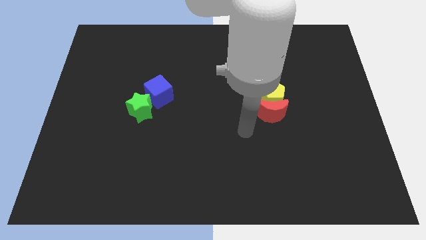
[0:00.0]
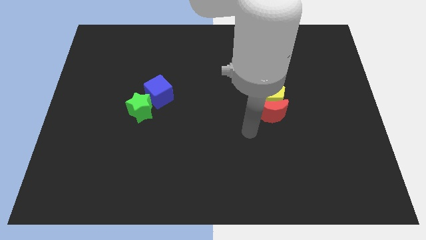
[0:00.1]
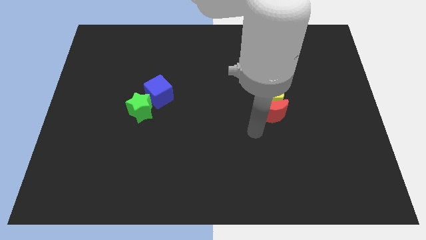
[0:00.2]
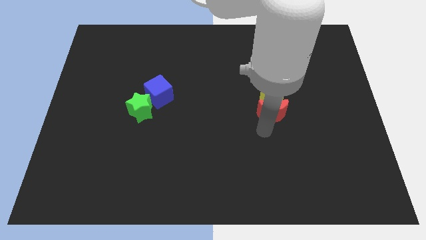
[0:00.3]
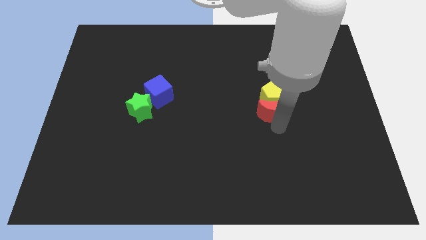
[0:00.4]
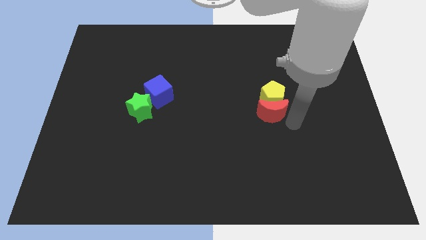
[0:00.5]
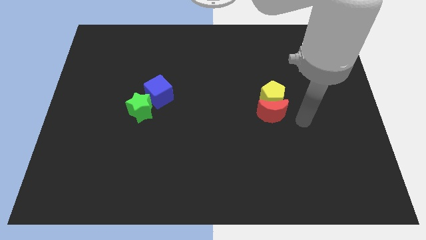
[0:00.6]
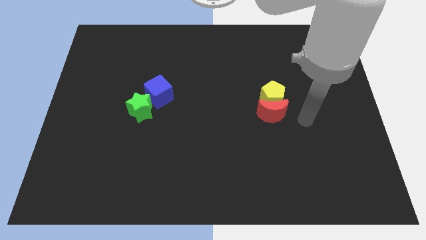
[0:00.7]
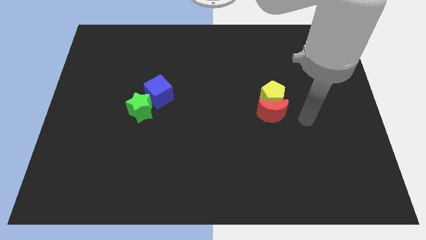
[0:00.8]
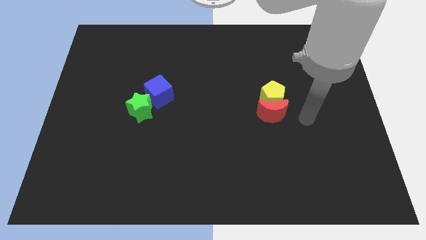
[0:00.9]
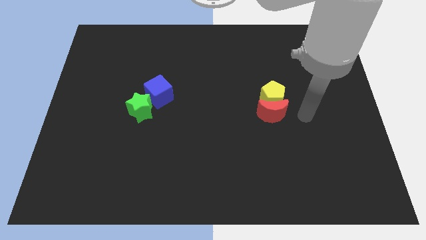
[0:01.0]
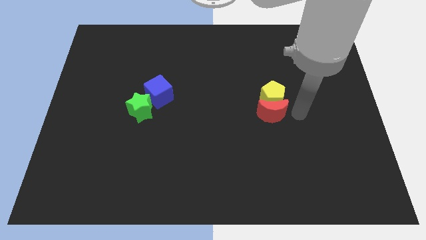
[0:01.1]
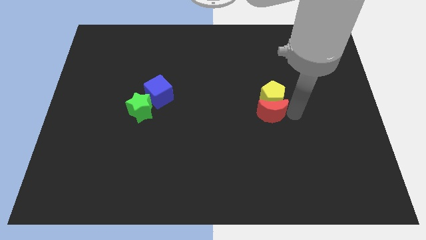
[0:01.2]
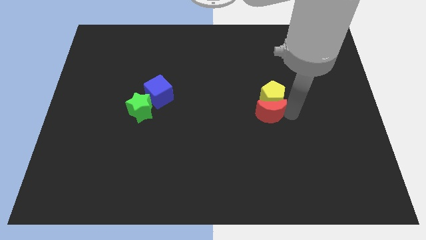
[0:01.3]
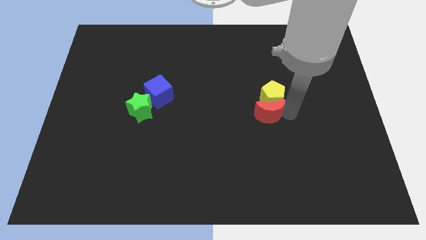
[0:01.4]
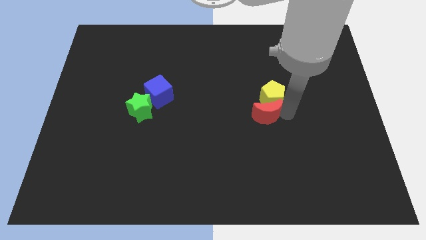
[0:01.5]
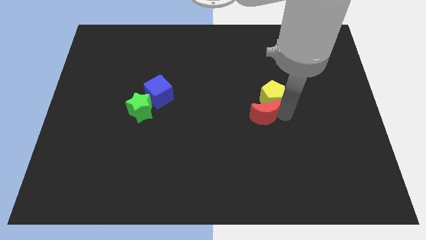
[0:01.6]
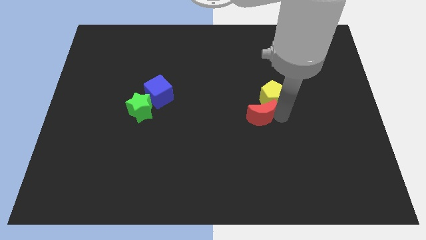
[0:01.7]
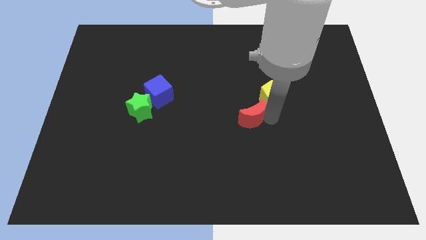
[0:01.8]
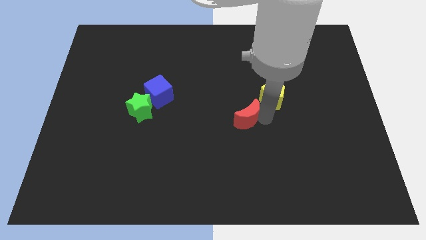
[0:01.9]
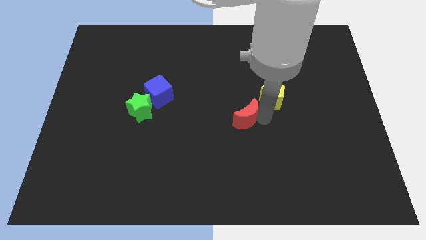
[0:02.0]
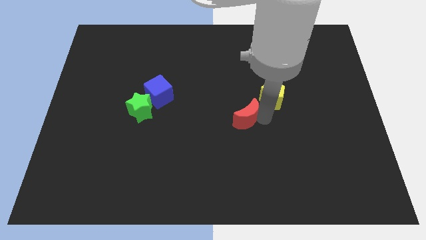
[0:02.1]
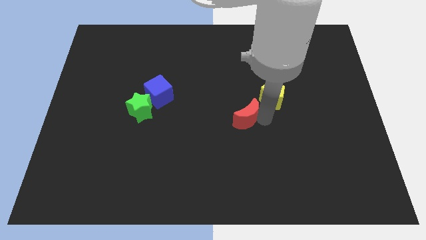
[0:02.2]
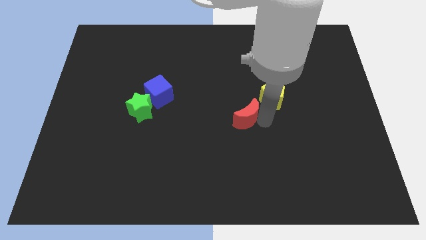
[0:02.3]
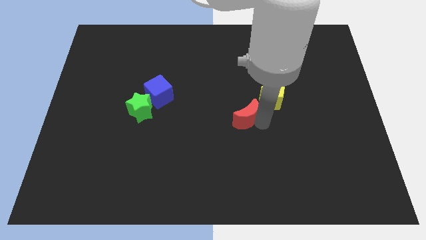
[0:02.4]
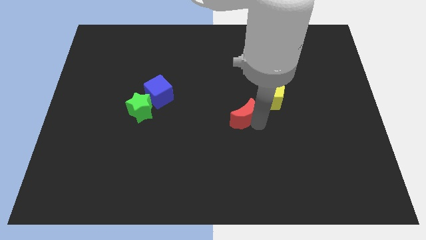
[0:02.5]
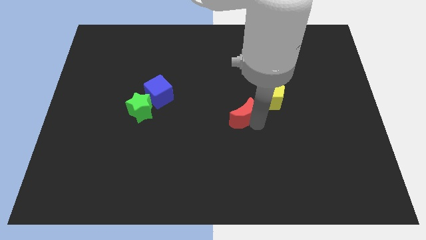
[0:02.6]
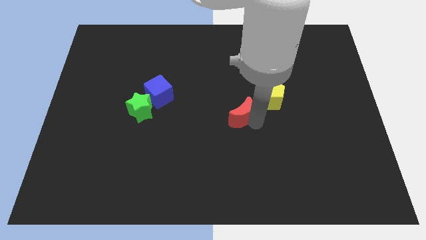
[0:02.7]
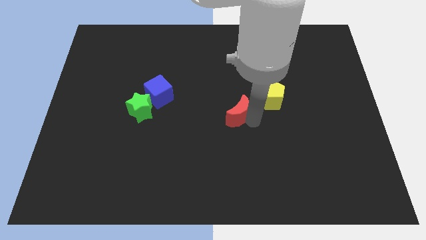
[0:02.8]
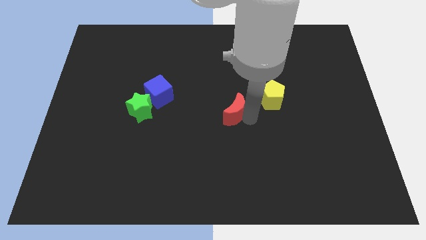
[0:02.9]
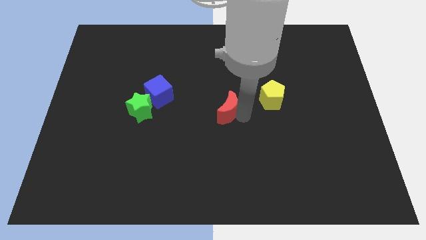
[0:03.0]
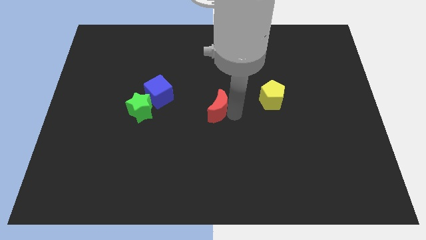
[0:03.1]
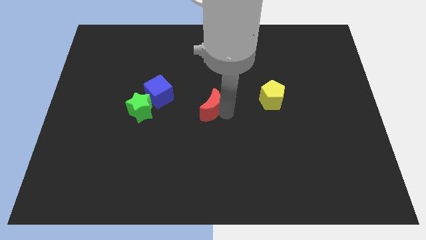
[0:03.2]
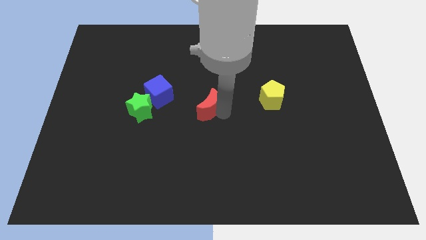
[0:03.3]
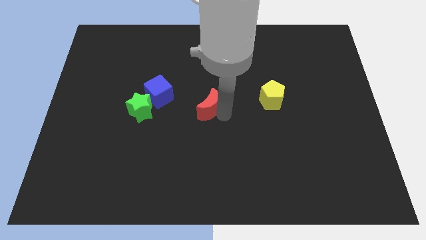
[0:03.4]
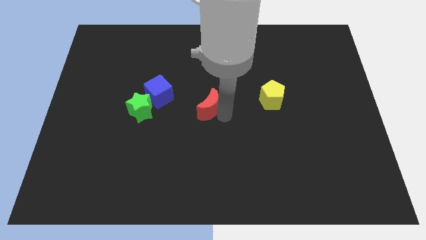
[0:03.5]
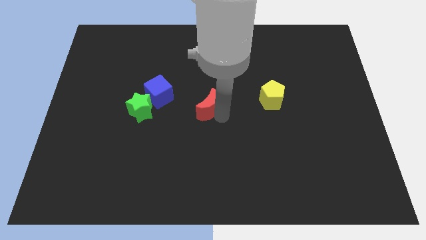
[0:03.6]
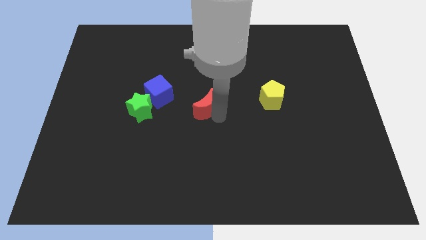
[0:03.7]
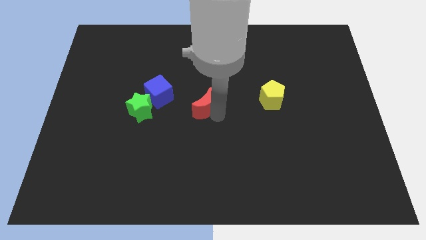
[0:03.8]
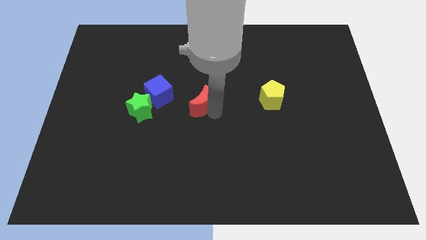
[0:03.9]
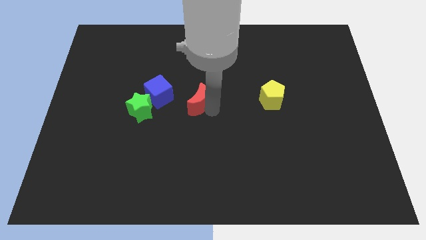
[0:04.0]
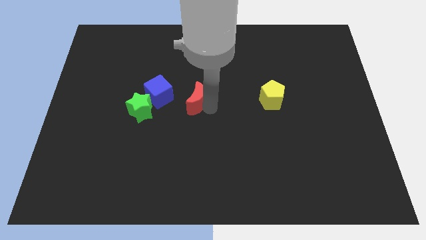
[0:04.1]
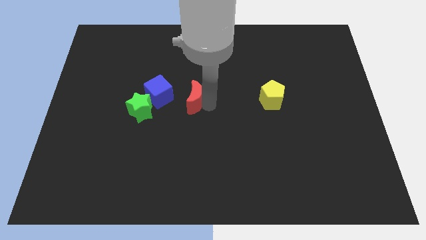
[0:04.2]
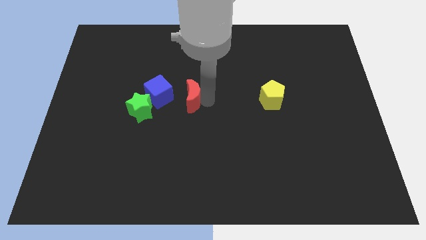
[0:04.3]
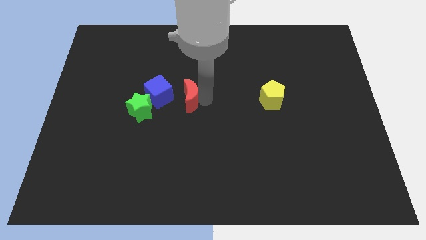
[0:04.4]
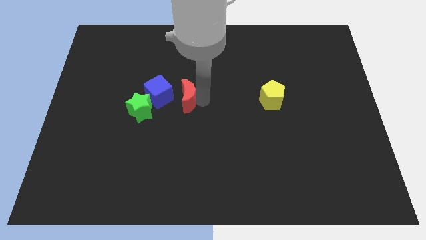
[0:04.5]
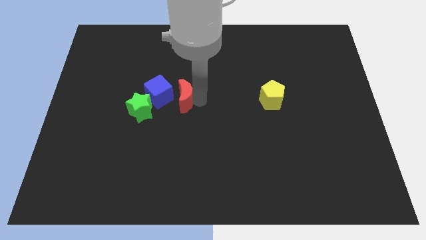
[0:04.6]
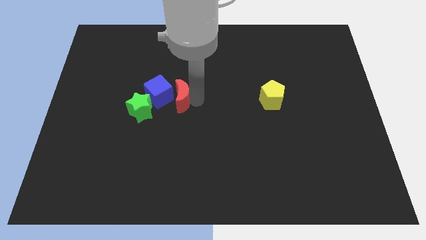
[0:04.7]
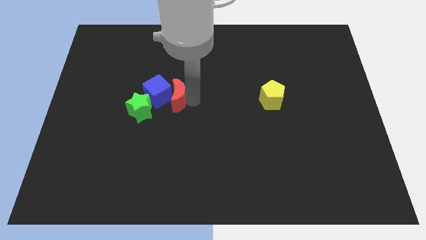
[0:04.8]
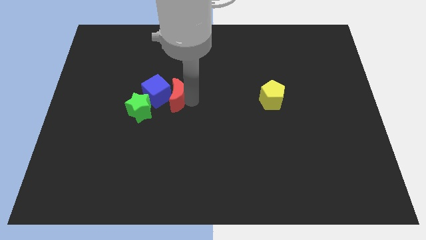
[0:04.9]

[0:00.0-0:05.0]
put the red block to the blue cube

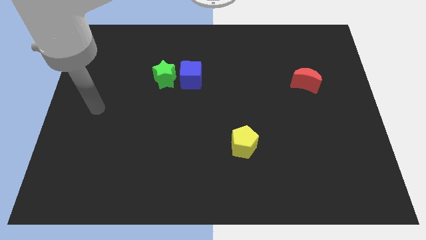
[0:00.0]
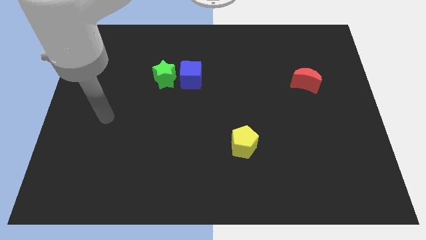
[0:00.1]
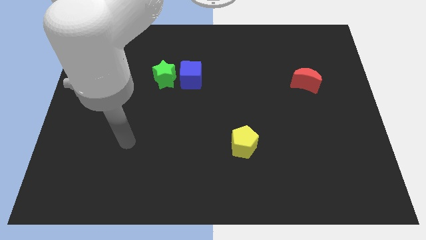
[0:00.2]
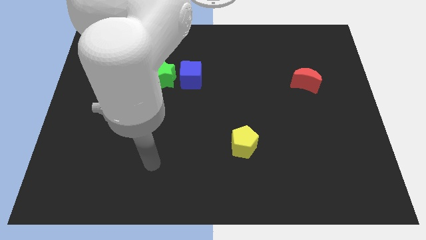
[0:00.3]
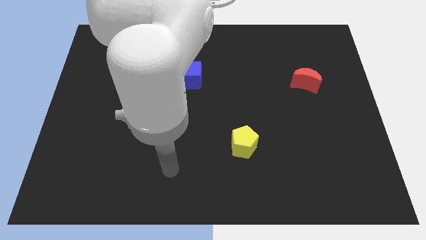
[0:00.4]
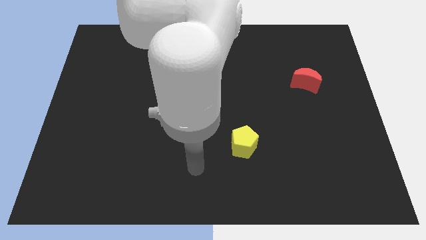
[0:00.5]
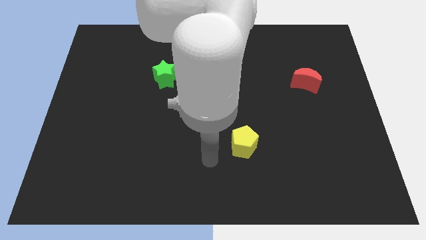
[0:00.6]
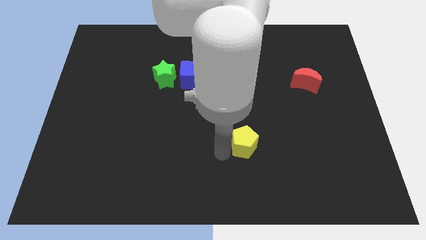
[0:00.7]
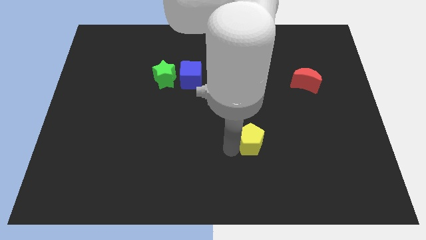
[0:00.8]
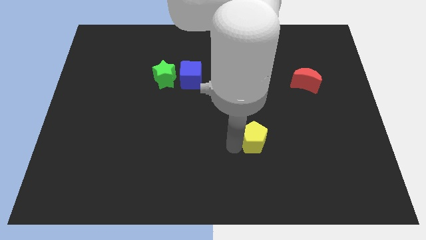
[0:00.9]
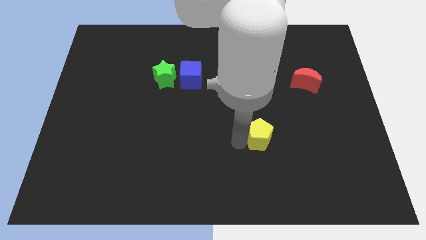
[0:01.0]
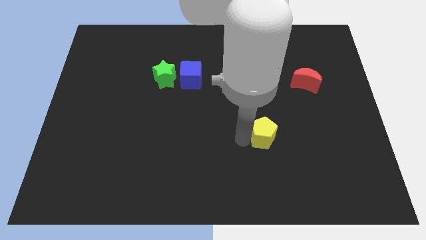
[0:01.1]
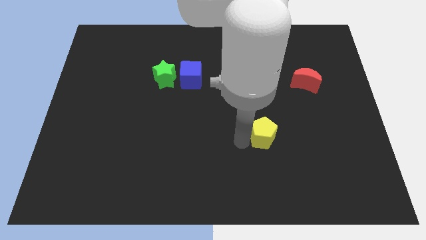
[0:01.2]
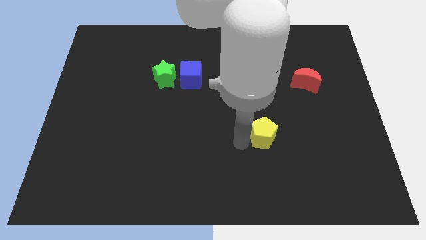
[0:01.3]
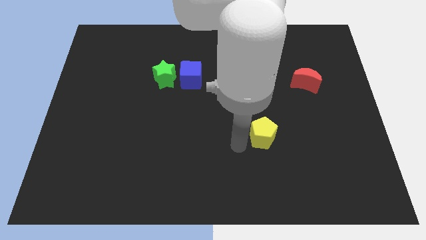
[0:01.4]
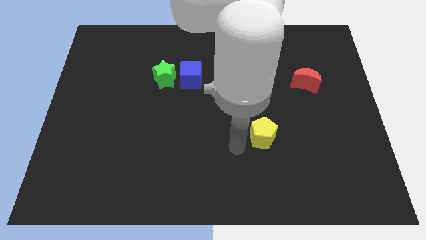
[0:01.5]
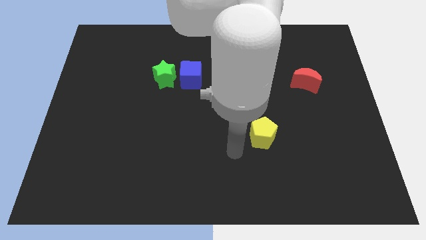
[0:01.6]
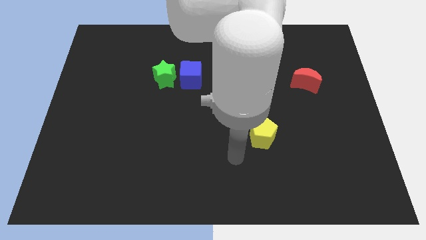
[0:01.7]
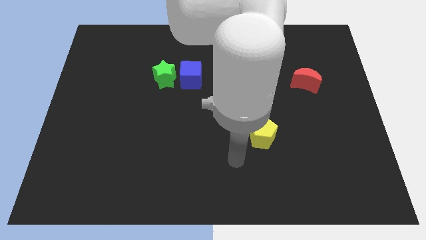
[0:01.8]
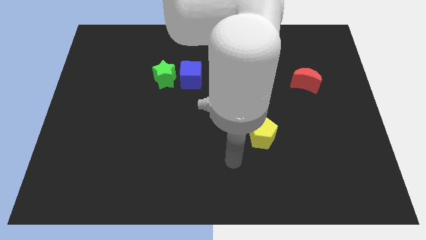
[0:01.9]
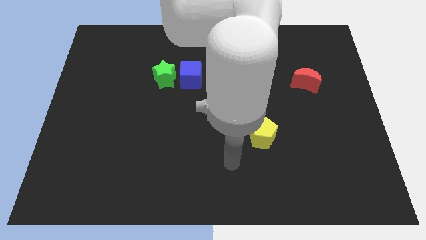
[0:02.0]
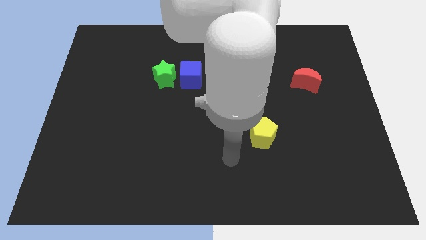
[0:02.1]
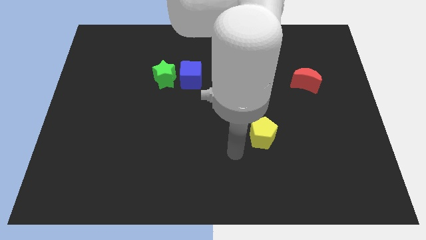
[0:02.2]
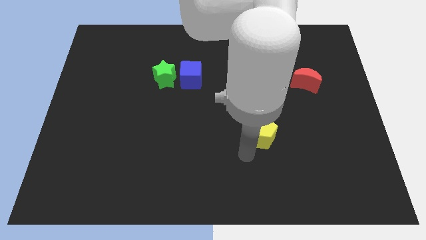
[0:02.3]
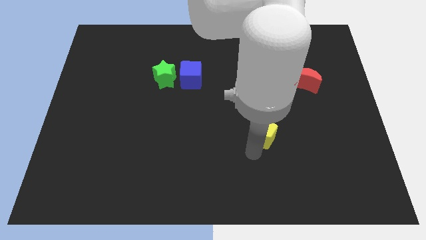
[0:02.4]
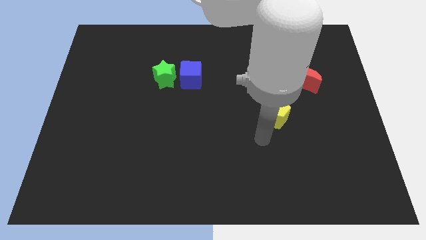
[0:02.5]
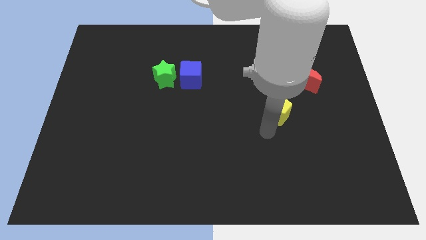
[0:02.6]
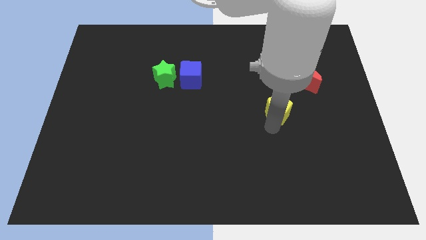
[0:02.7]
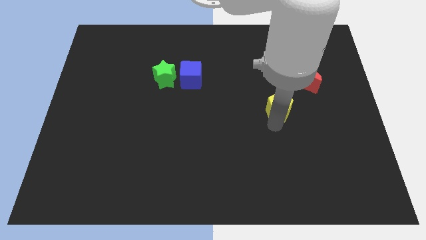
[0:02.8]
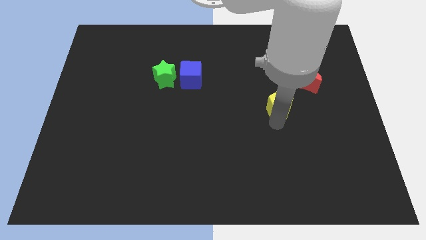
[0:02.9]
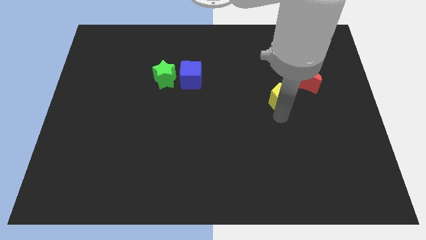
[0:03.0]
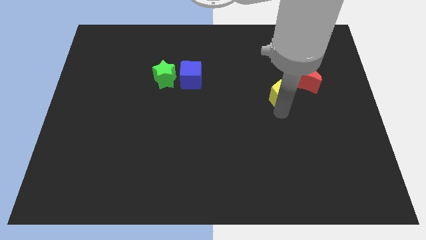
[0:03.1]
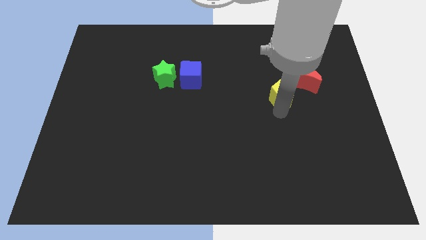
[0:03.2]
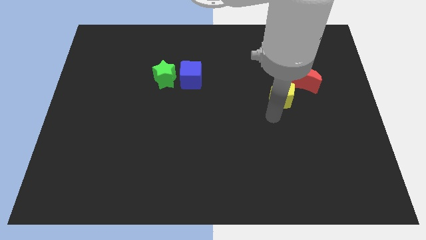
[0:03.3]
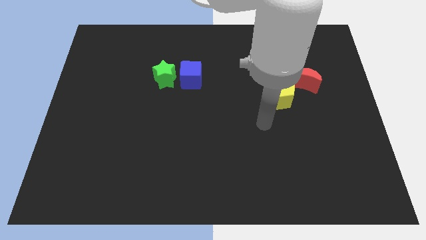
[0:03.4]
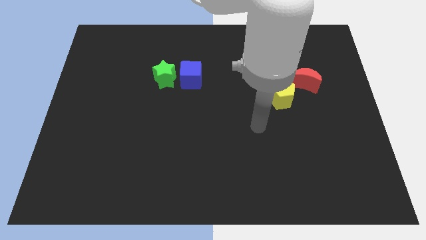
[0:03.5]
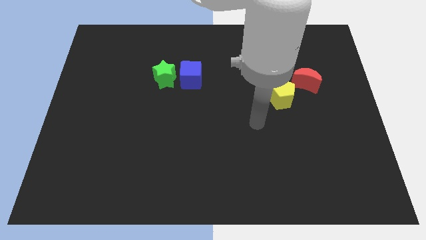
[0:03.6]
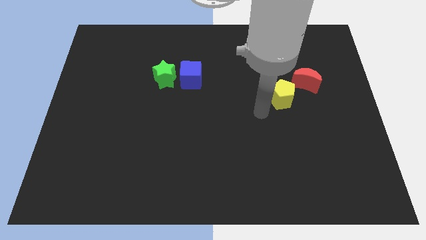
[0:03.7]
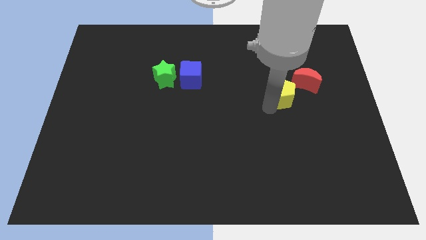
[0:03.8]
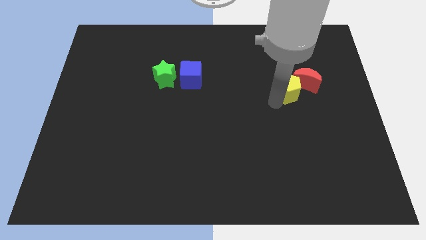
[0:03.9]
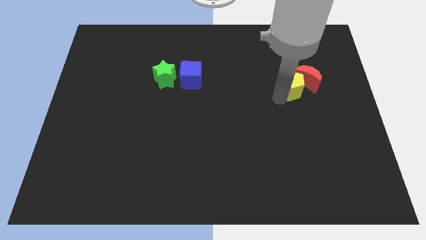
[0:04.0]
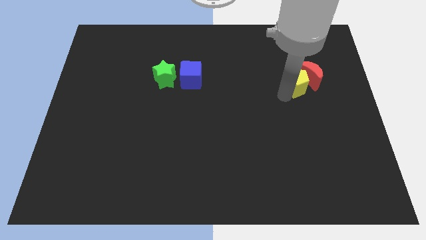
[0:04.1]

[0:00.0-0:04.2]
slide the yellow pentagon towards the red moon
